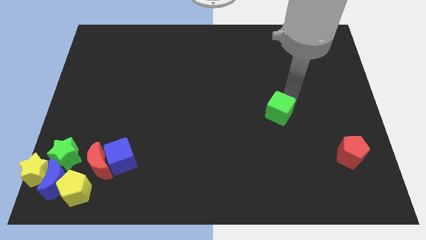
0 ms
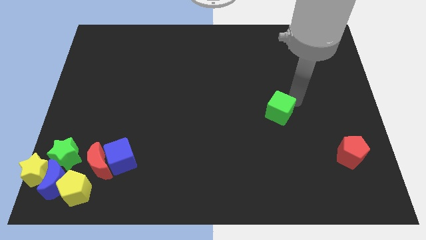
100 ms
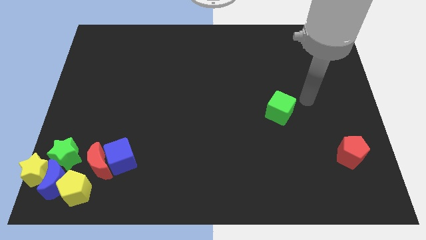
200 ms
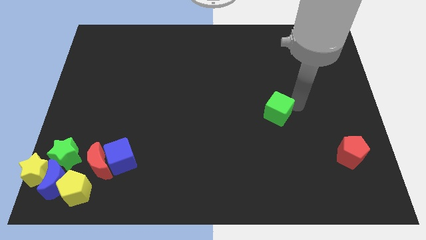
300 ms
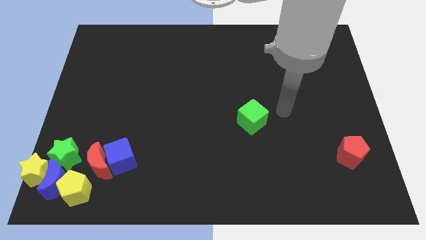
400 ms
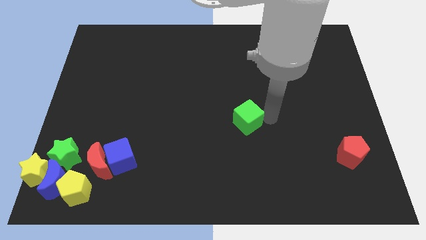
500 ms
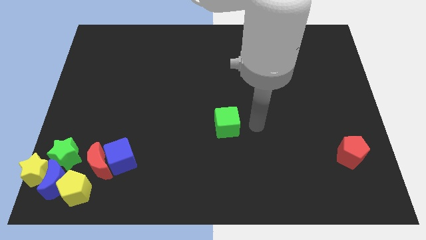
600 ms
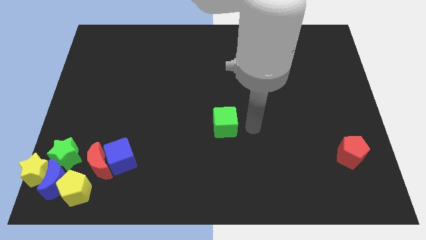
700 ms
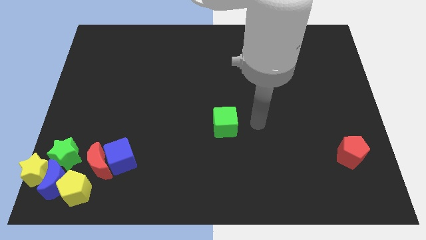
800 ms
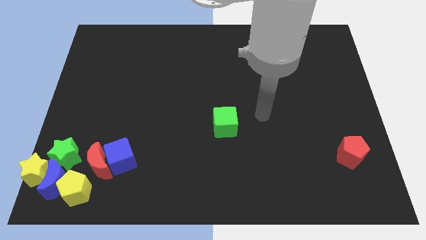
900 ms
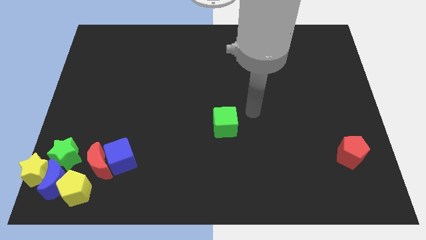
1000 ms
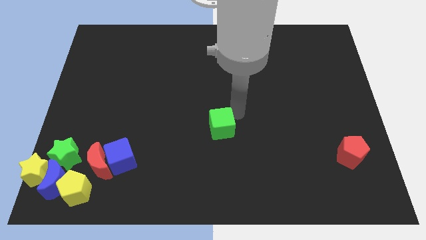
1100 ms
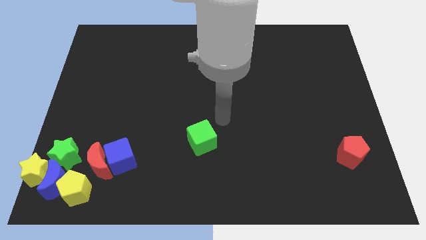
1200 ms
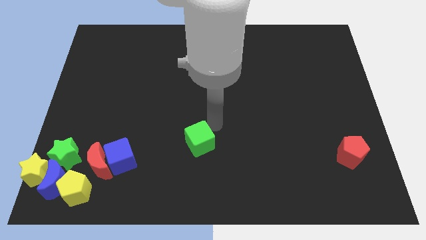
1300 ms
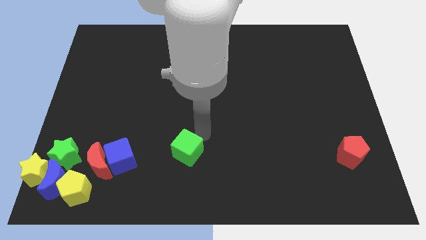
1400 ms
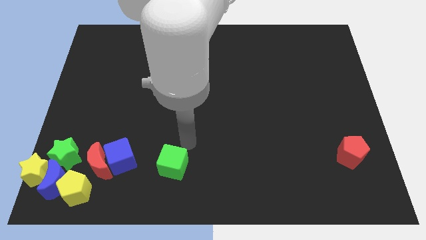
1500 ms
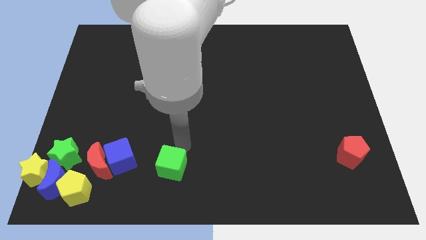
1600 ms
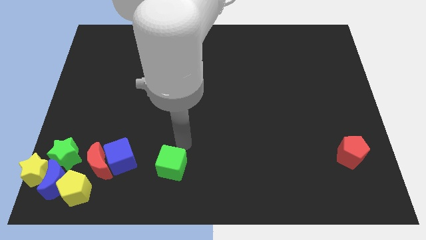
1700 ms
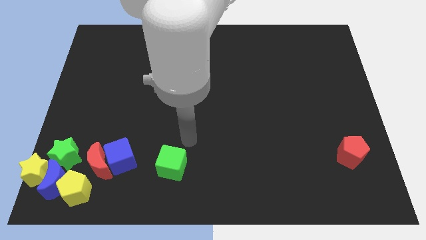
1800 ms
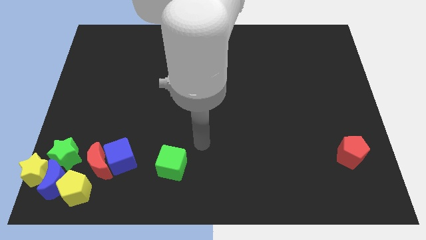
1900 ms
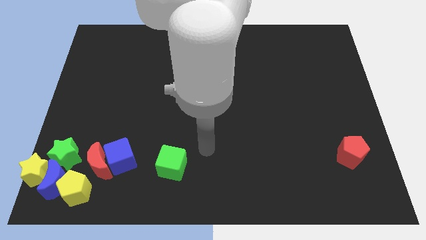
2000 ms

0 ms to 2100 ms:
place green cube to the right of blue cube

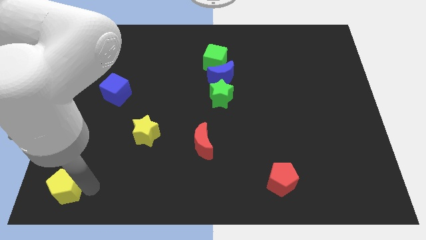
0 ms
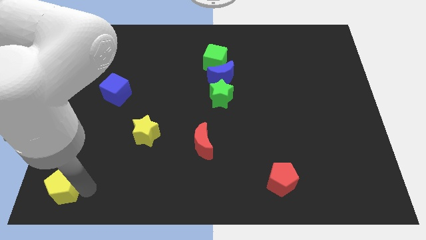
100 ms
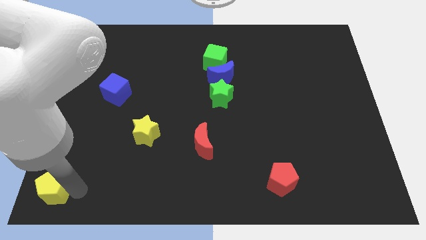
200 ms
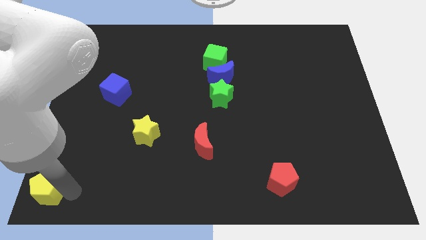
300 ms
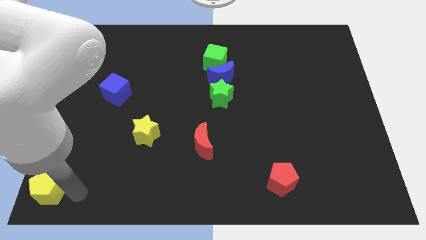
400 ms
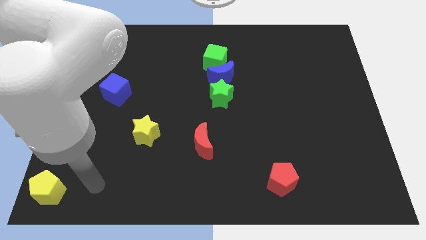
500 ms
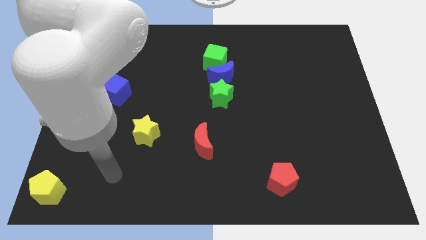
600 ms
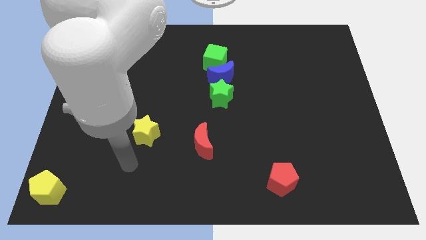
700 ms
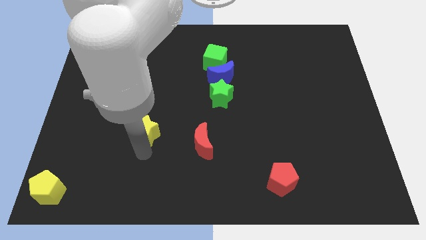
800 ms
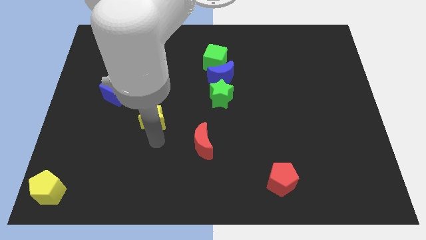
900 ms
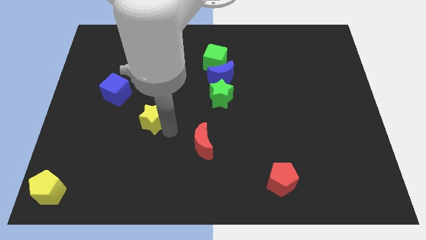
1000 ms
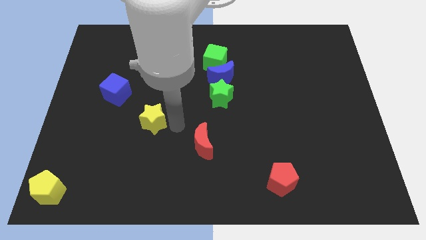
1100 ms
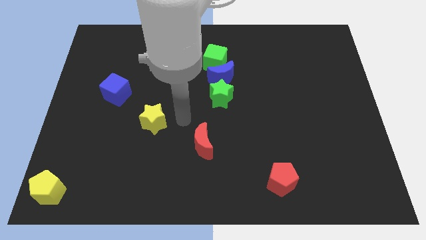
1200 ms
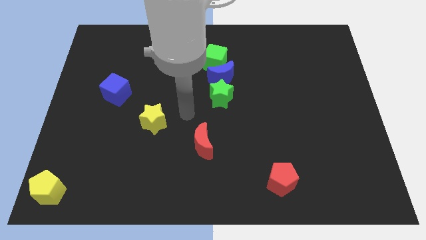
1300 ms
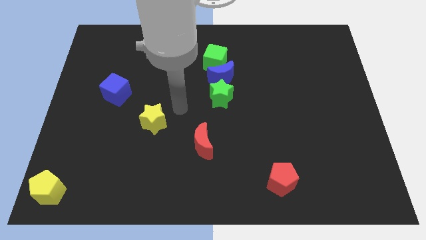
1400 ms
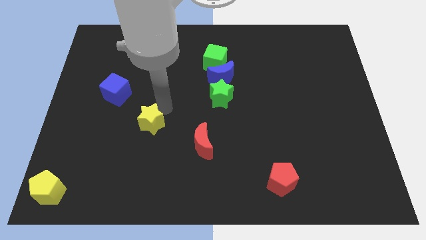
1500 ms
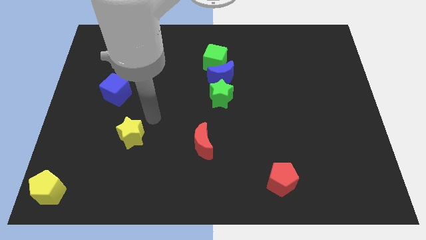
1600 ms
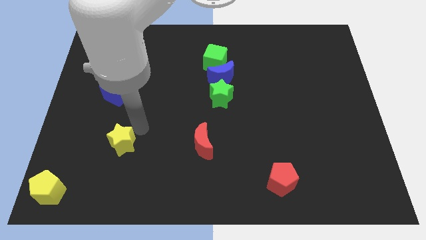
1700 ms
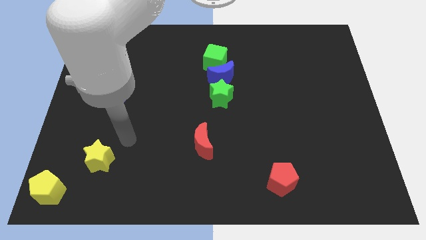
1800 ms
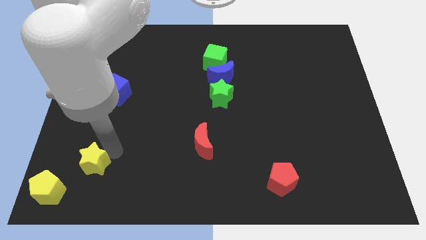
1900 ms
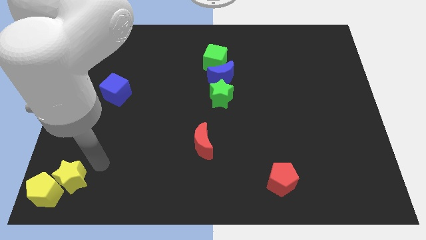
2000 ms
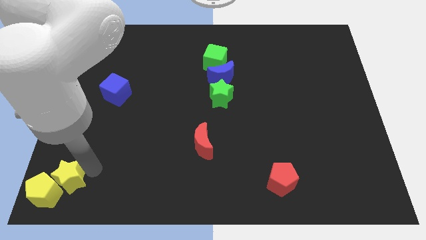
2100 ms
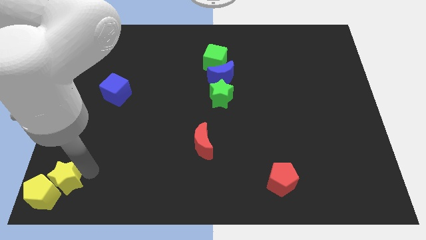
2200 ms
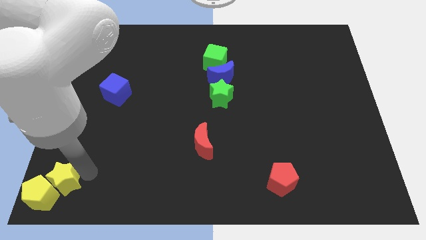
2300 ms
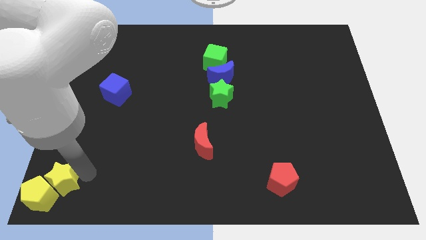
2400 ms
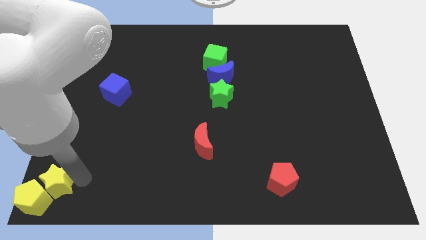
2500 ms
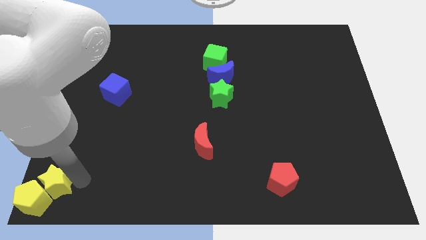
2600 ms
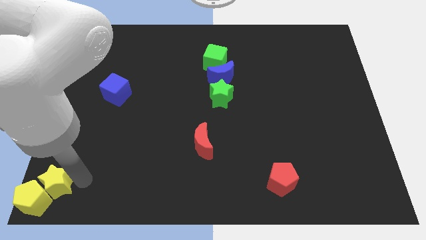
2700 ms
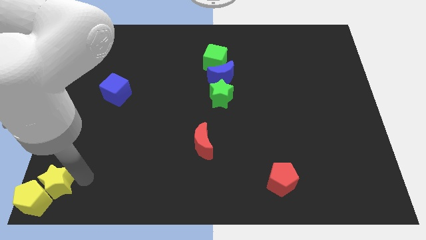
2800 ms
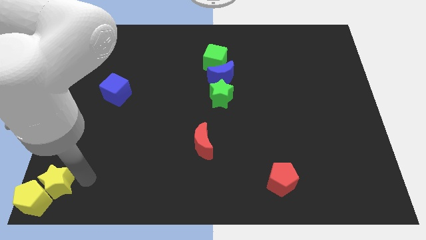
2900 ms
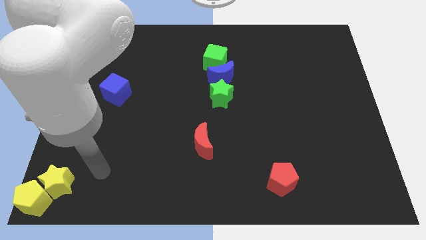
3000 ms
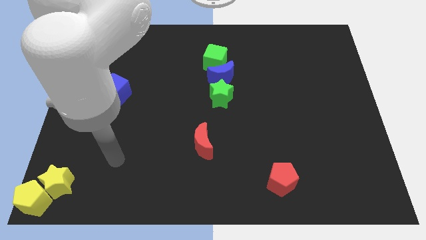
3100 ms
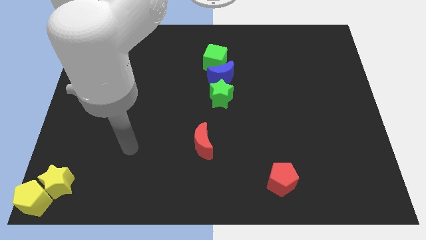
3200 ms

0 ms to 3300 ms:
move the yellow blocks to the bottom left corner of the board

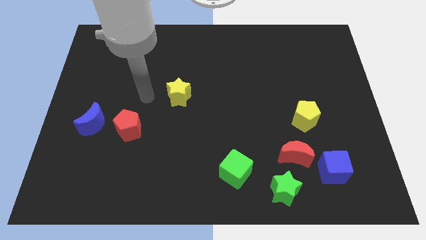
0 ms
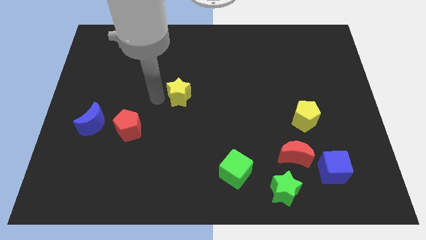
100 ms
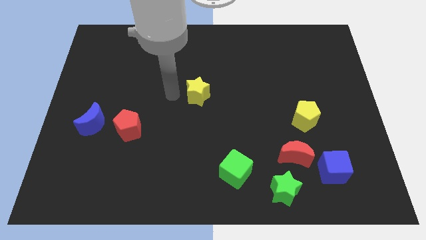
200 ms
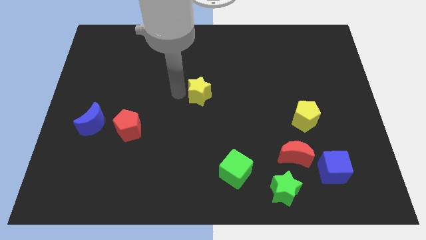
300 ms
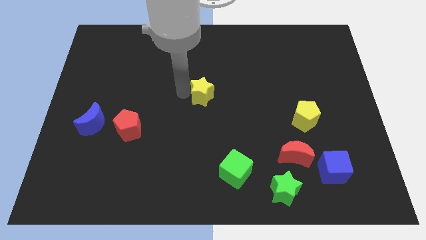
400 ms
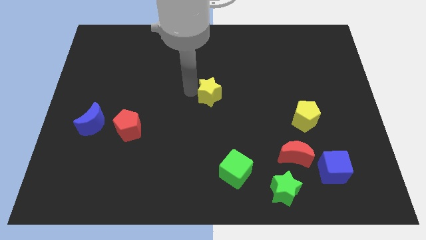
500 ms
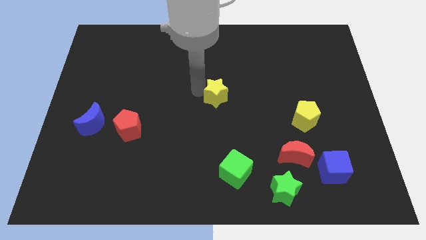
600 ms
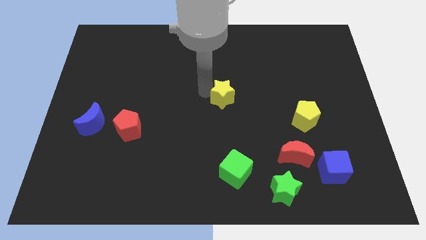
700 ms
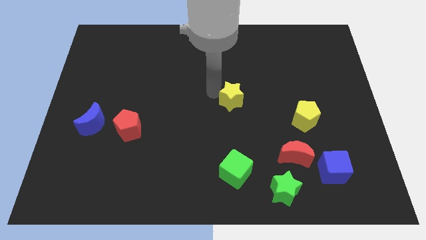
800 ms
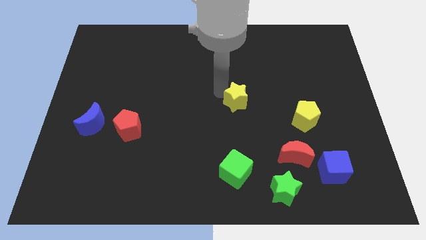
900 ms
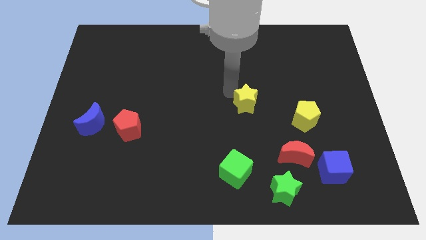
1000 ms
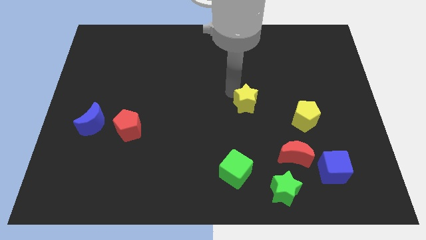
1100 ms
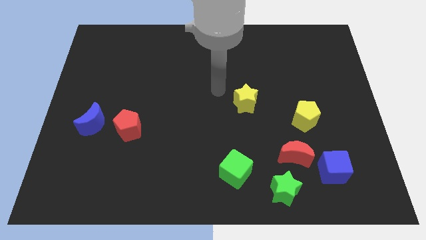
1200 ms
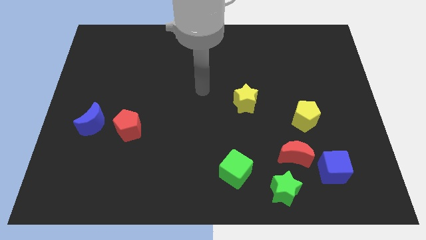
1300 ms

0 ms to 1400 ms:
place the yellow star diagonally top left to the yellow pentagon

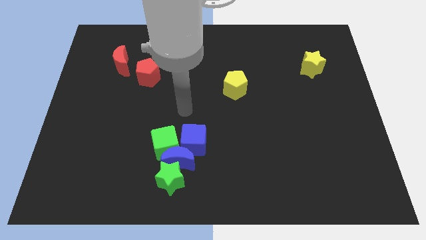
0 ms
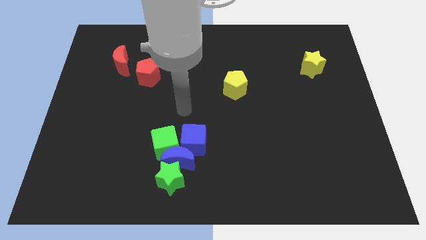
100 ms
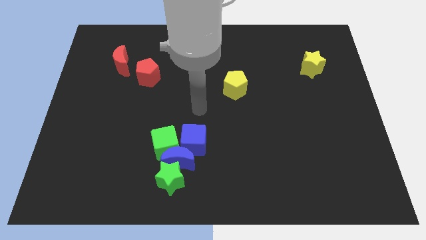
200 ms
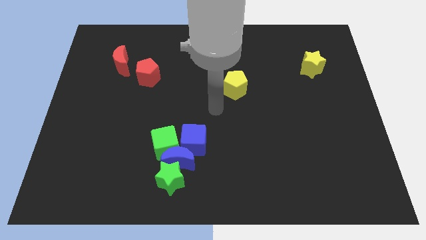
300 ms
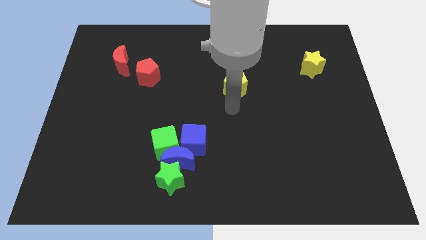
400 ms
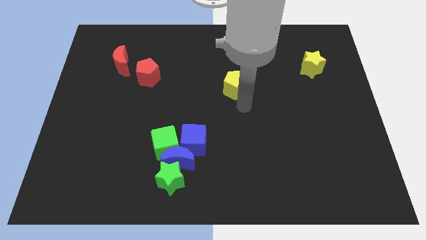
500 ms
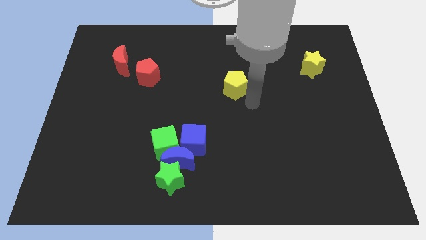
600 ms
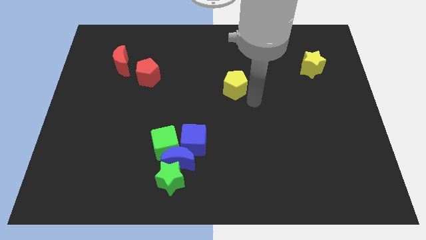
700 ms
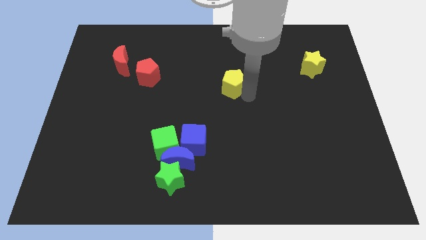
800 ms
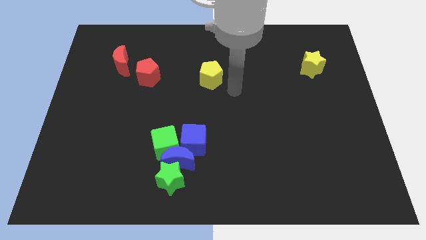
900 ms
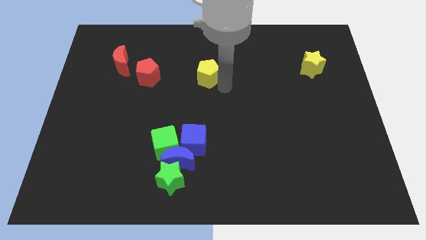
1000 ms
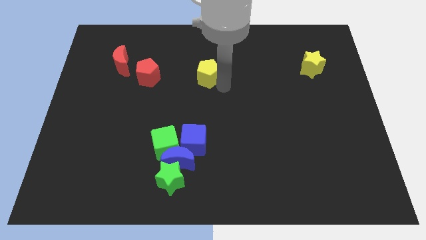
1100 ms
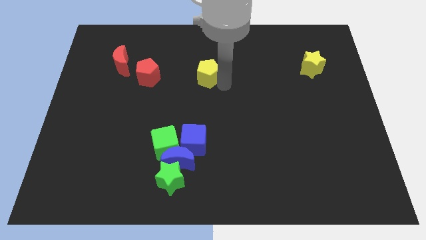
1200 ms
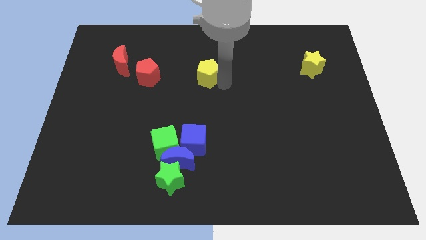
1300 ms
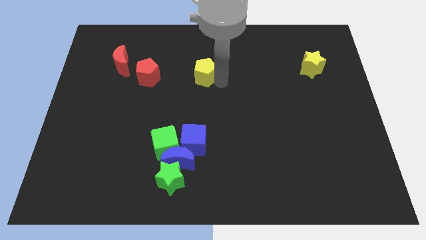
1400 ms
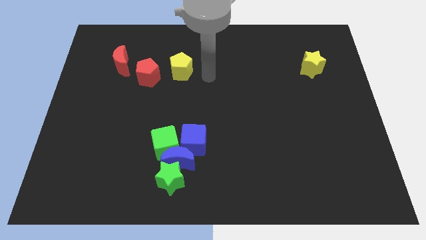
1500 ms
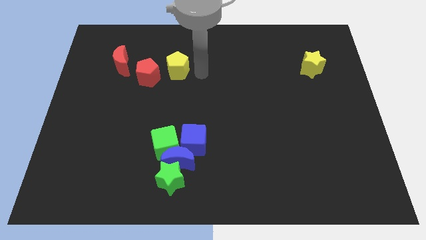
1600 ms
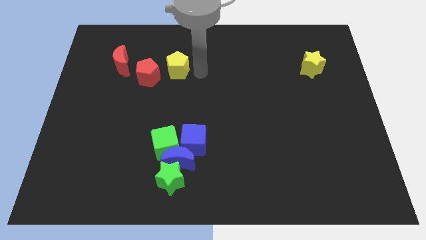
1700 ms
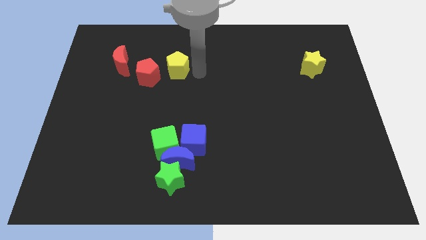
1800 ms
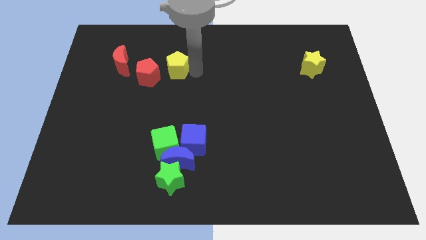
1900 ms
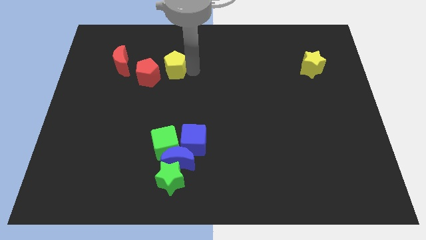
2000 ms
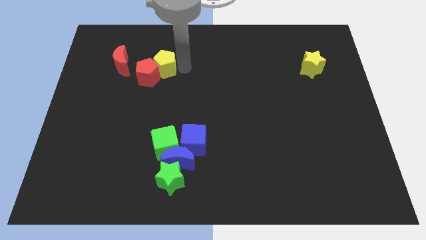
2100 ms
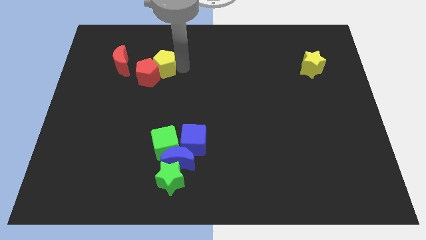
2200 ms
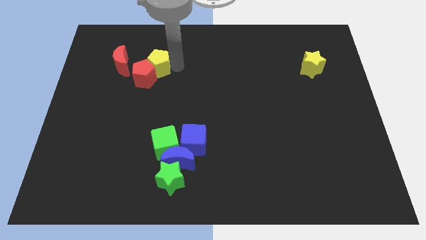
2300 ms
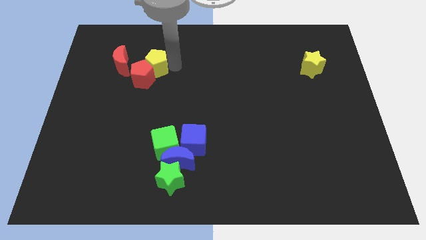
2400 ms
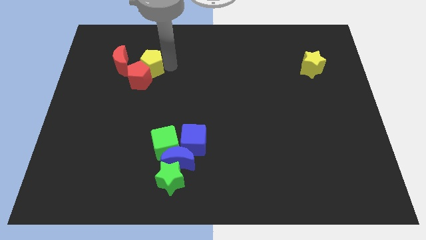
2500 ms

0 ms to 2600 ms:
push yellow pentagon in to red pentagon
